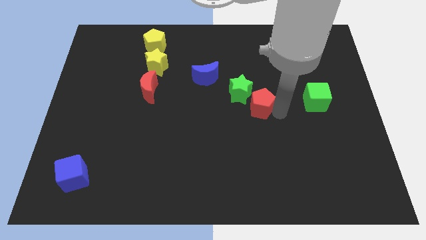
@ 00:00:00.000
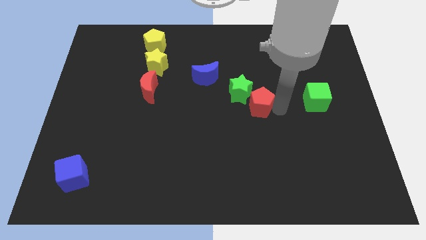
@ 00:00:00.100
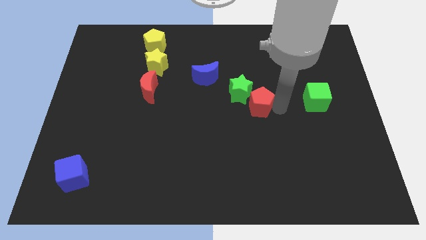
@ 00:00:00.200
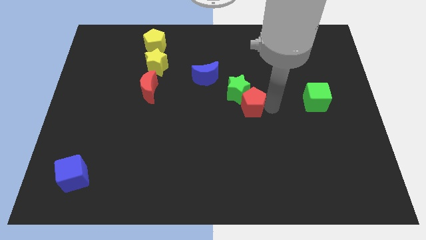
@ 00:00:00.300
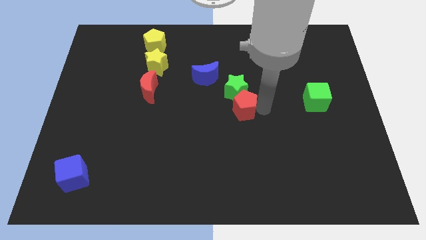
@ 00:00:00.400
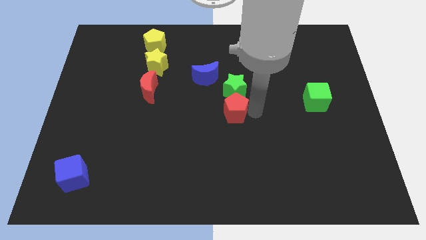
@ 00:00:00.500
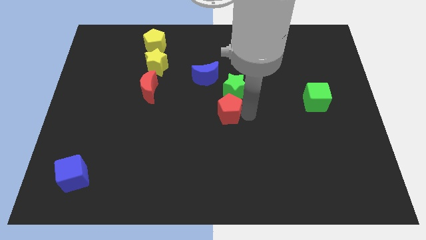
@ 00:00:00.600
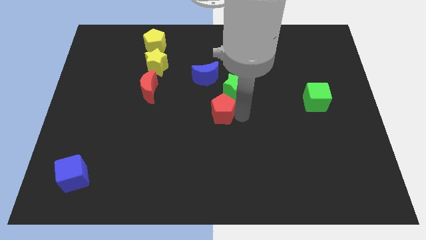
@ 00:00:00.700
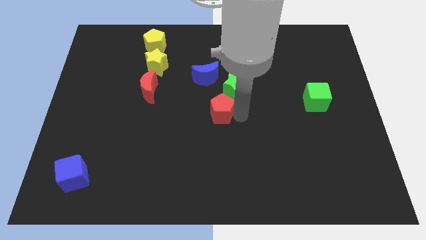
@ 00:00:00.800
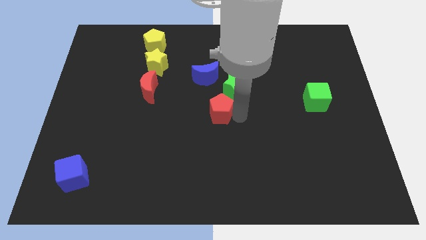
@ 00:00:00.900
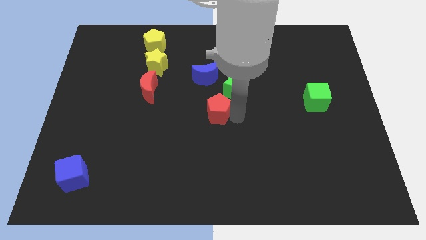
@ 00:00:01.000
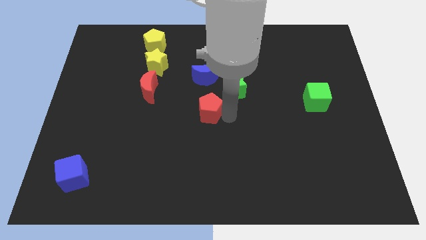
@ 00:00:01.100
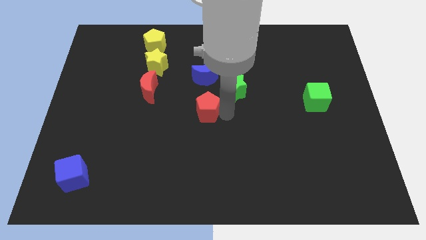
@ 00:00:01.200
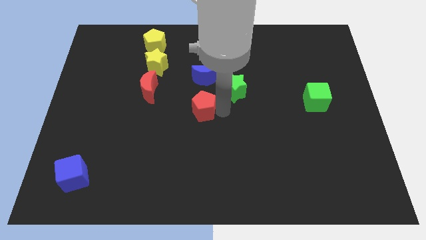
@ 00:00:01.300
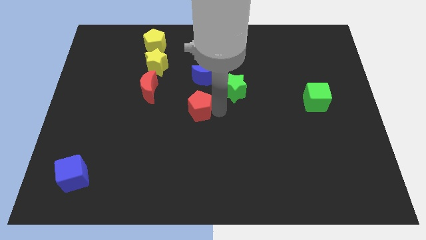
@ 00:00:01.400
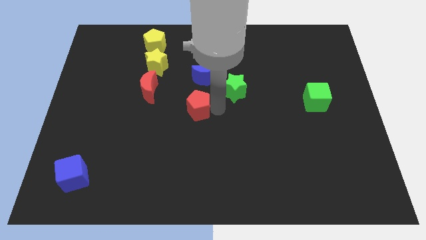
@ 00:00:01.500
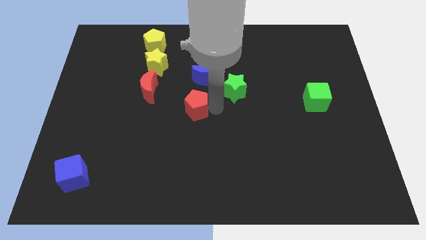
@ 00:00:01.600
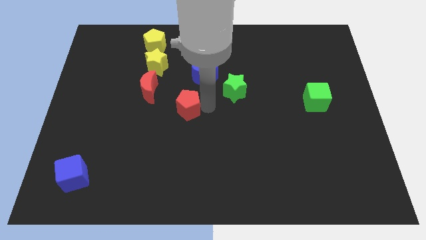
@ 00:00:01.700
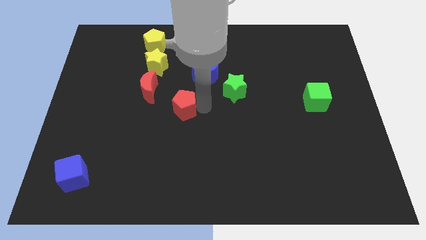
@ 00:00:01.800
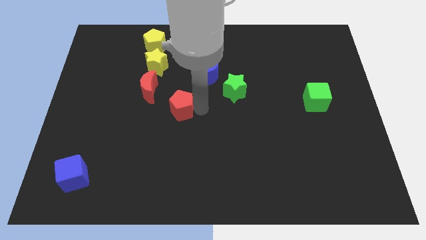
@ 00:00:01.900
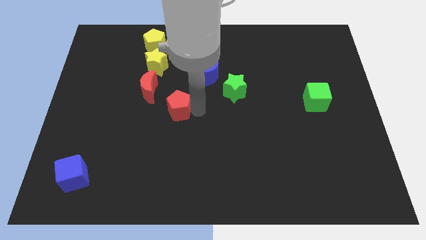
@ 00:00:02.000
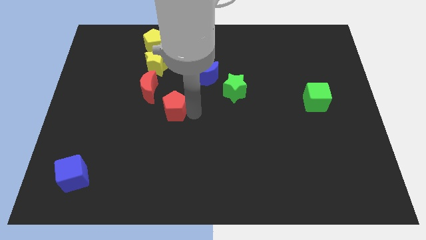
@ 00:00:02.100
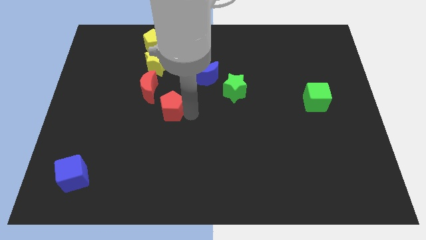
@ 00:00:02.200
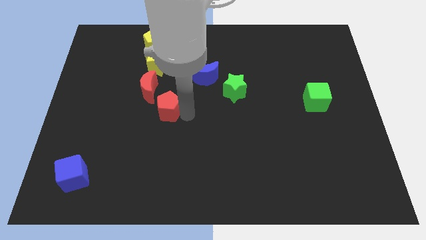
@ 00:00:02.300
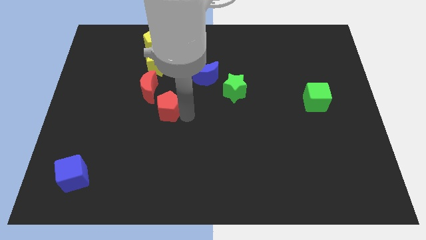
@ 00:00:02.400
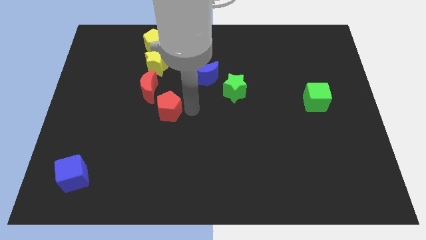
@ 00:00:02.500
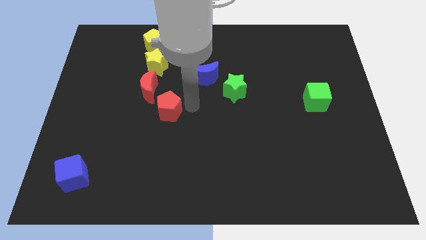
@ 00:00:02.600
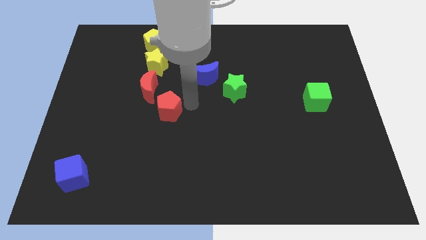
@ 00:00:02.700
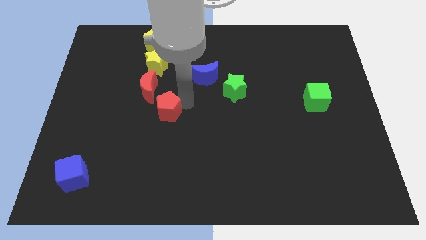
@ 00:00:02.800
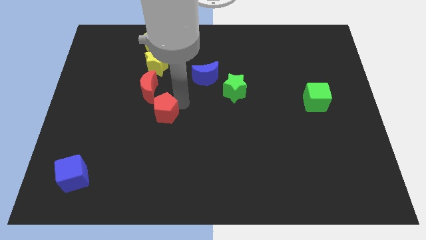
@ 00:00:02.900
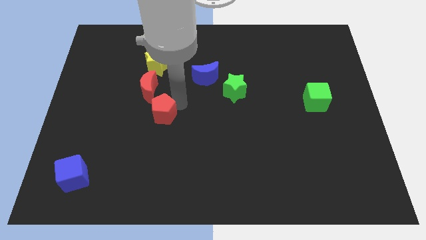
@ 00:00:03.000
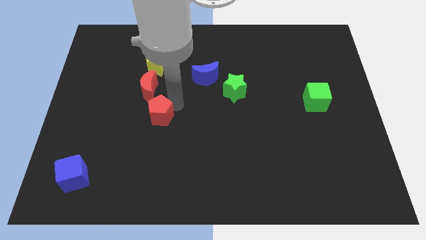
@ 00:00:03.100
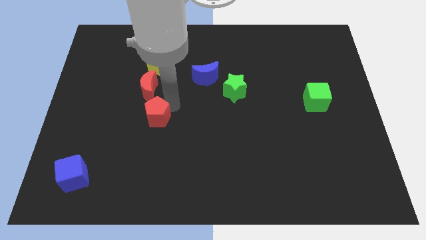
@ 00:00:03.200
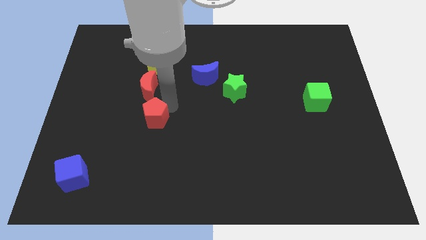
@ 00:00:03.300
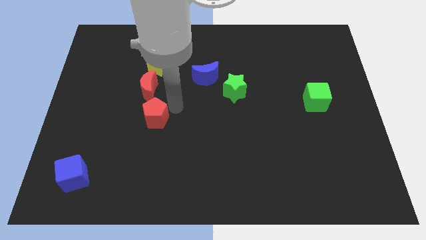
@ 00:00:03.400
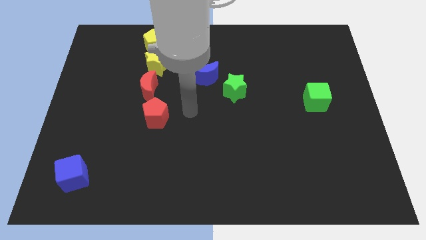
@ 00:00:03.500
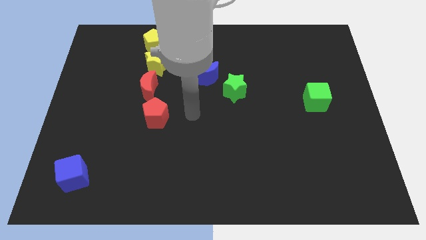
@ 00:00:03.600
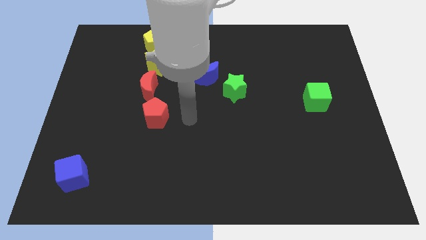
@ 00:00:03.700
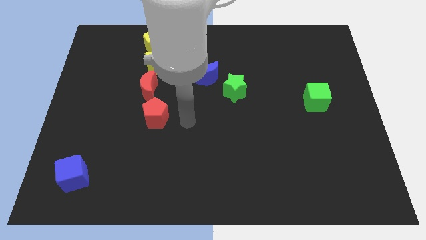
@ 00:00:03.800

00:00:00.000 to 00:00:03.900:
push the red pentagon below the red crescent

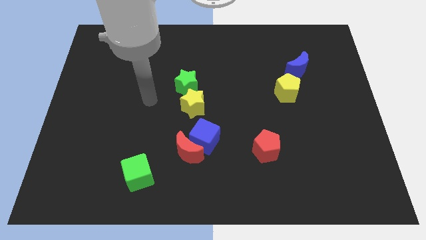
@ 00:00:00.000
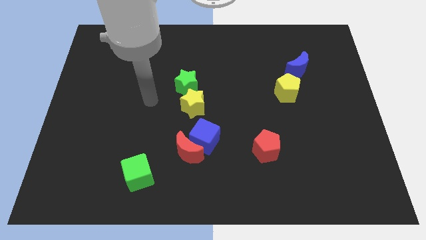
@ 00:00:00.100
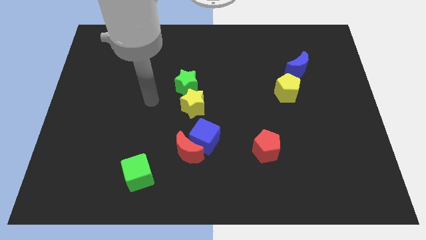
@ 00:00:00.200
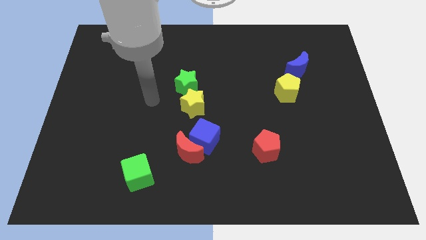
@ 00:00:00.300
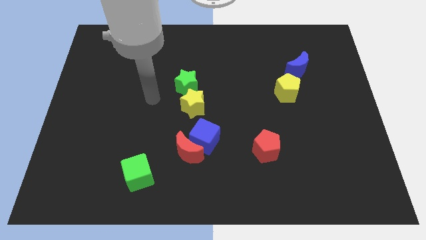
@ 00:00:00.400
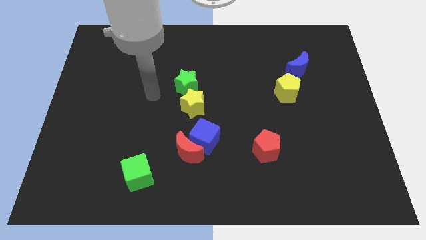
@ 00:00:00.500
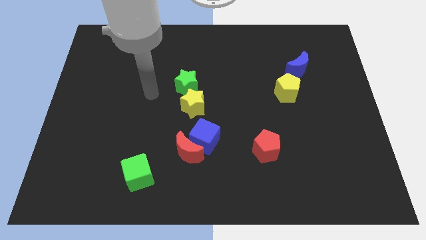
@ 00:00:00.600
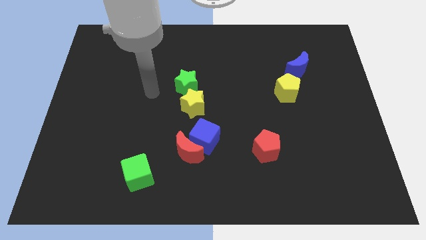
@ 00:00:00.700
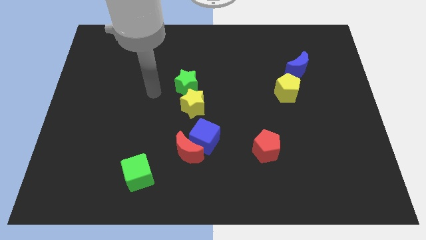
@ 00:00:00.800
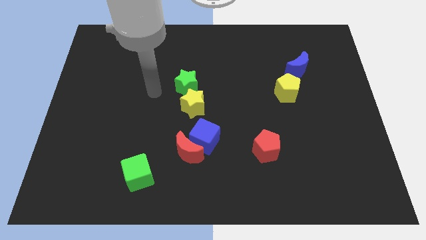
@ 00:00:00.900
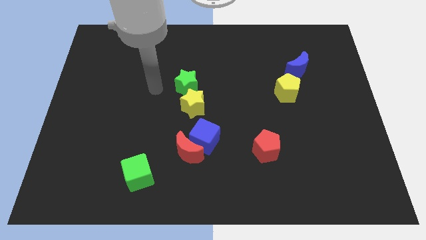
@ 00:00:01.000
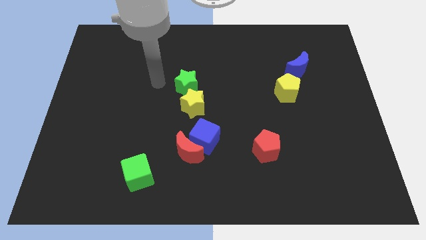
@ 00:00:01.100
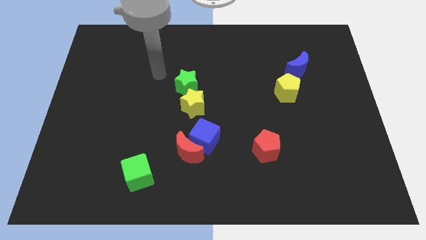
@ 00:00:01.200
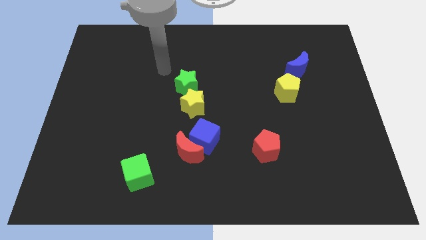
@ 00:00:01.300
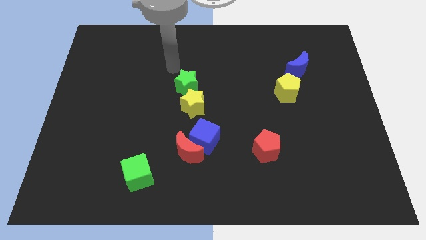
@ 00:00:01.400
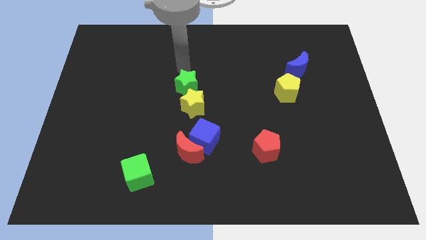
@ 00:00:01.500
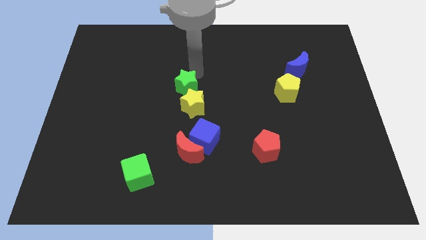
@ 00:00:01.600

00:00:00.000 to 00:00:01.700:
move the arm to the top of the green star

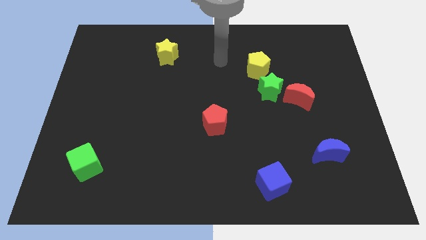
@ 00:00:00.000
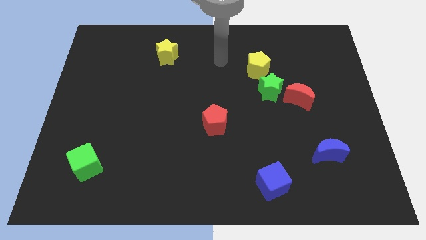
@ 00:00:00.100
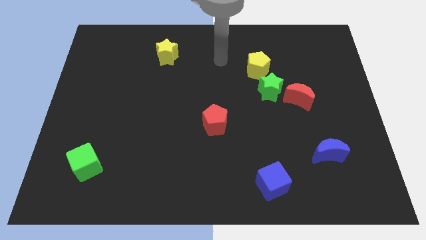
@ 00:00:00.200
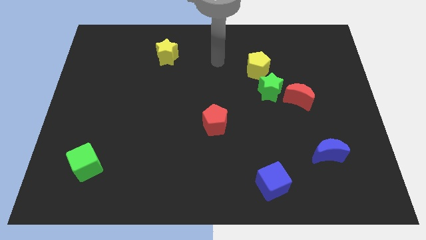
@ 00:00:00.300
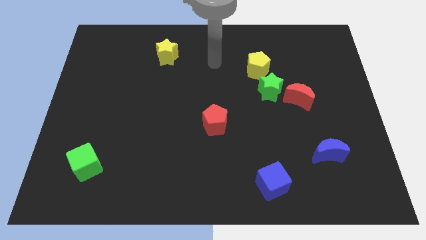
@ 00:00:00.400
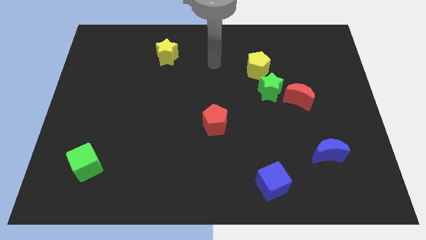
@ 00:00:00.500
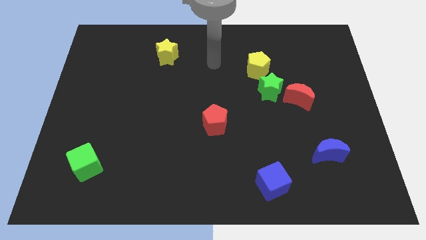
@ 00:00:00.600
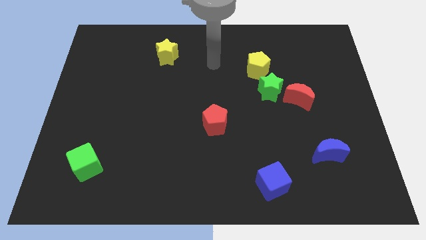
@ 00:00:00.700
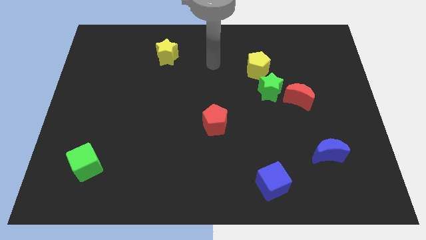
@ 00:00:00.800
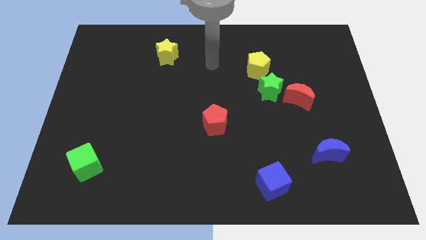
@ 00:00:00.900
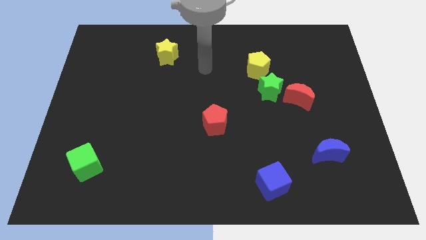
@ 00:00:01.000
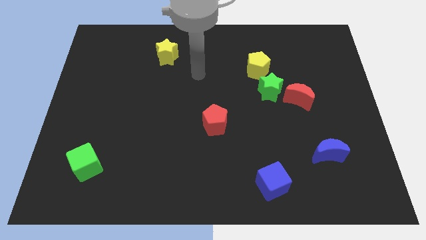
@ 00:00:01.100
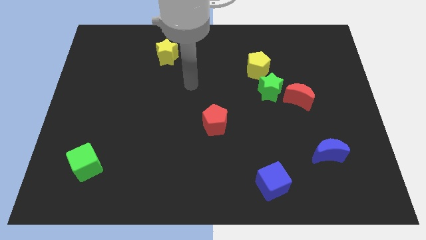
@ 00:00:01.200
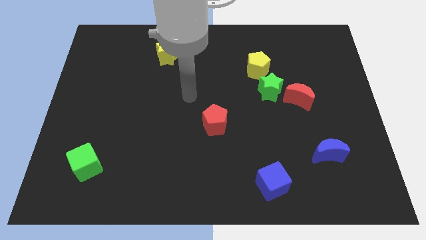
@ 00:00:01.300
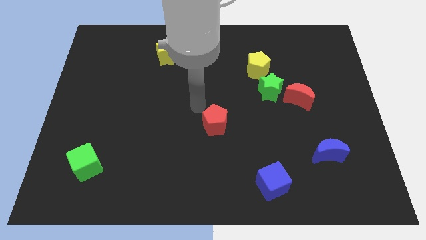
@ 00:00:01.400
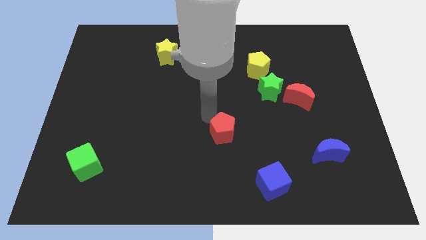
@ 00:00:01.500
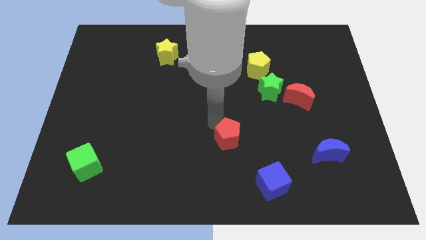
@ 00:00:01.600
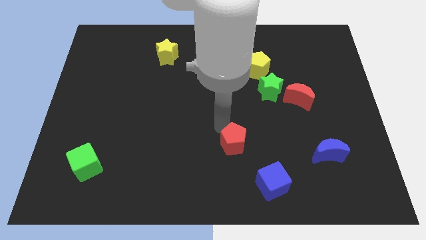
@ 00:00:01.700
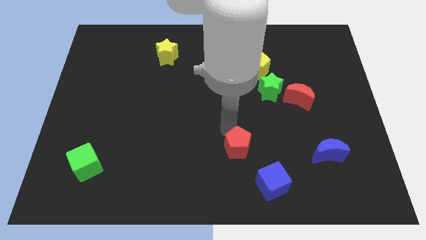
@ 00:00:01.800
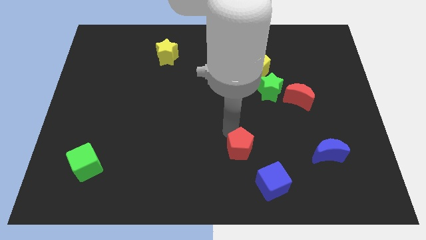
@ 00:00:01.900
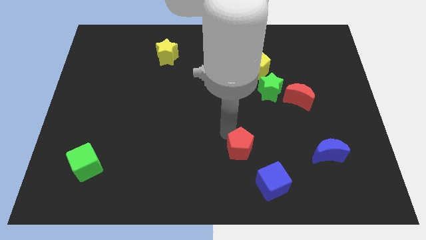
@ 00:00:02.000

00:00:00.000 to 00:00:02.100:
push the red pentagon diagonal above blue cube

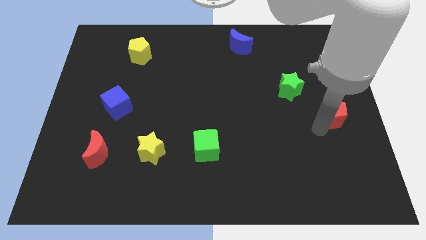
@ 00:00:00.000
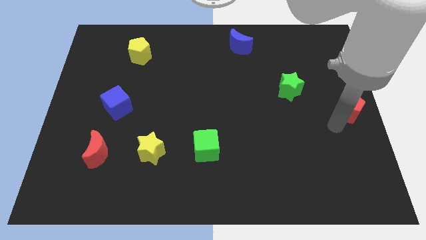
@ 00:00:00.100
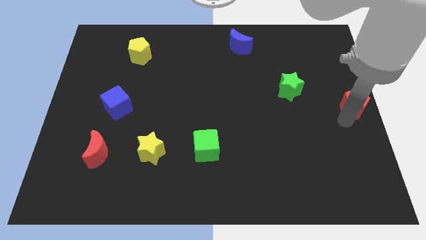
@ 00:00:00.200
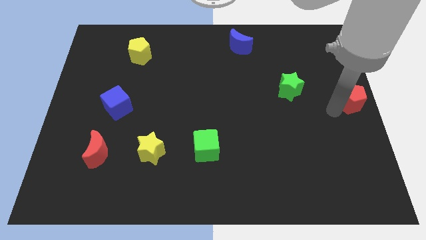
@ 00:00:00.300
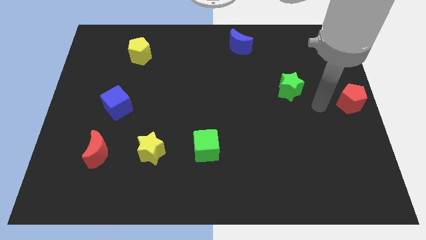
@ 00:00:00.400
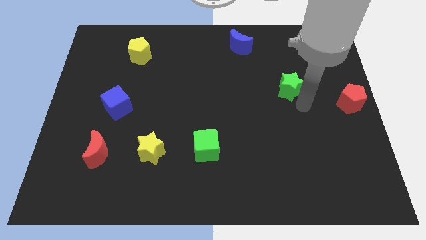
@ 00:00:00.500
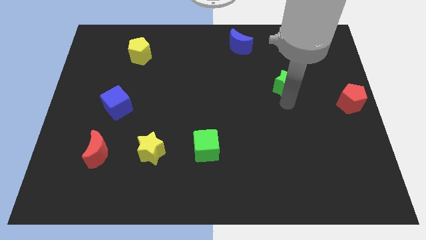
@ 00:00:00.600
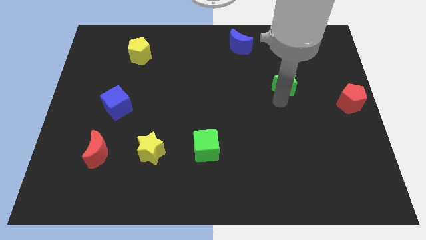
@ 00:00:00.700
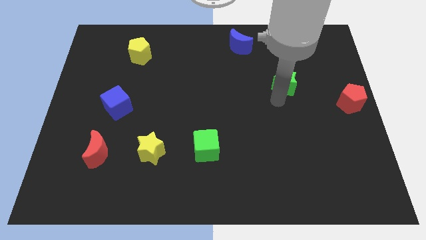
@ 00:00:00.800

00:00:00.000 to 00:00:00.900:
push the red pentagon to the right center of the board

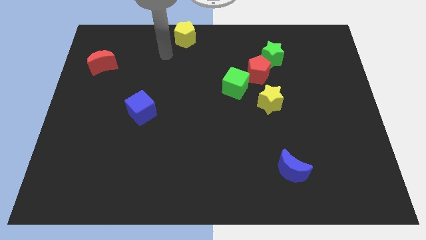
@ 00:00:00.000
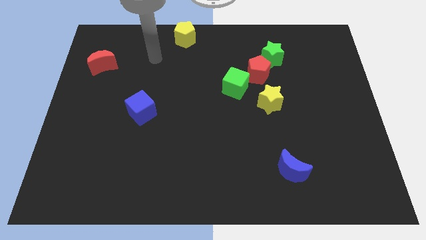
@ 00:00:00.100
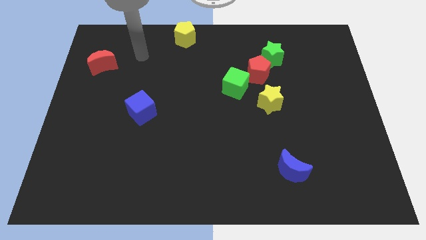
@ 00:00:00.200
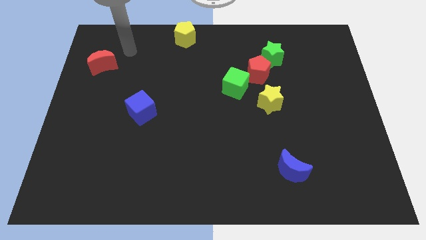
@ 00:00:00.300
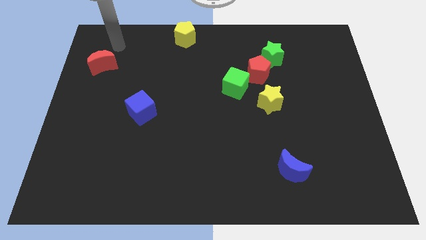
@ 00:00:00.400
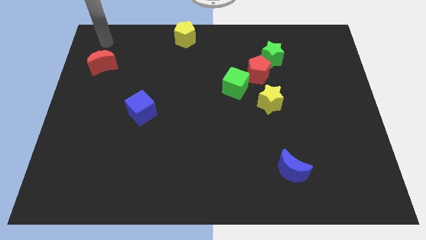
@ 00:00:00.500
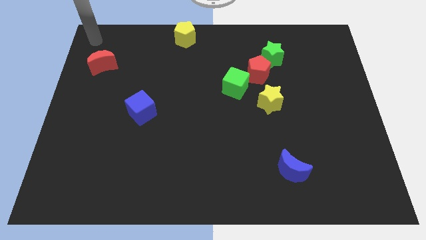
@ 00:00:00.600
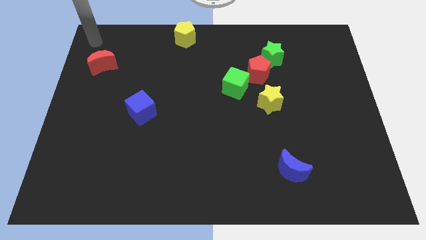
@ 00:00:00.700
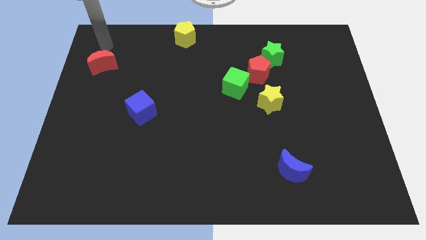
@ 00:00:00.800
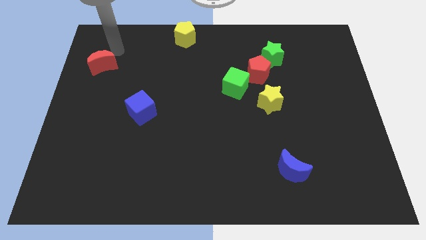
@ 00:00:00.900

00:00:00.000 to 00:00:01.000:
place your hand close to red crescent
